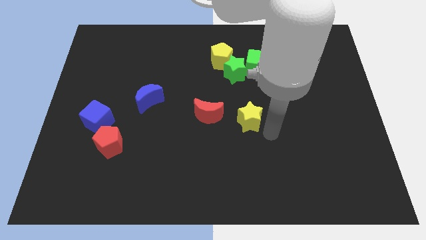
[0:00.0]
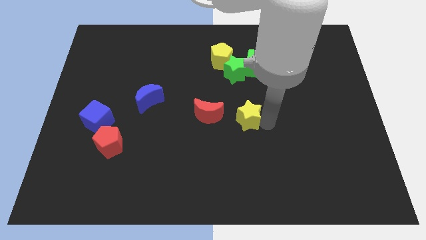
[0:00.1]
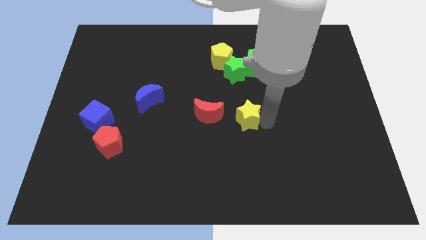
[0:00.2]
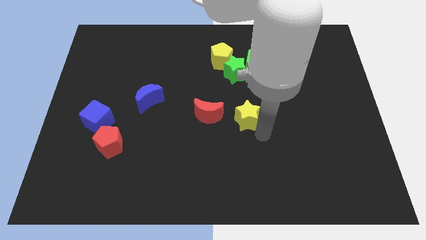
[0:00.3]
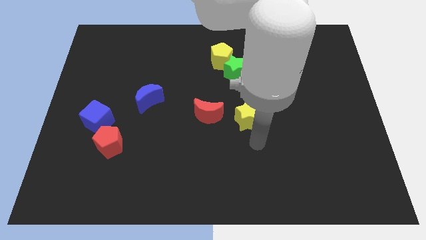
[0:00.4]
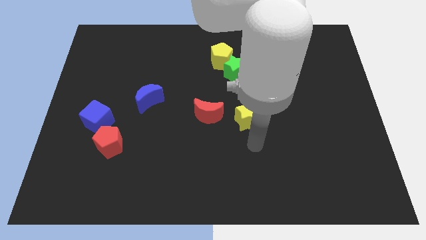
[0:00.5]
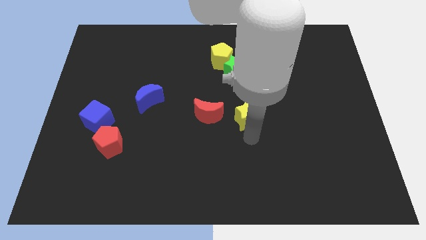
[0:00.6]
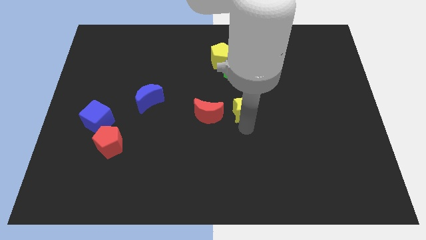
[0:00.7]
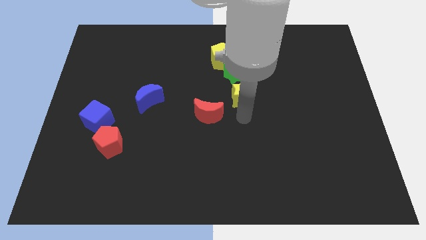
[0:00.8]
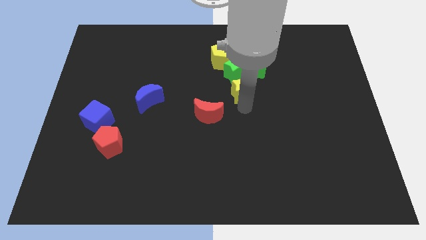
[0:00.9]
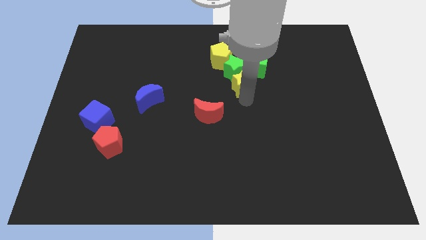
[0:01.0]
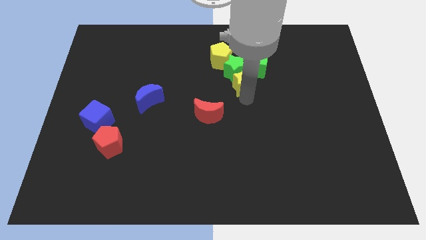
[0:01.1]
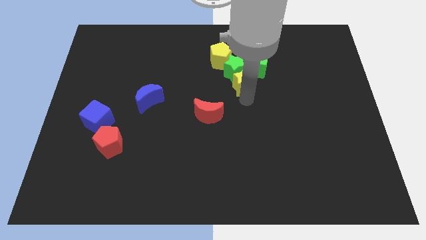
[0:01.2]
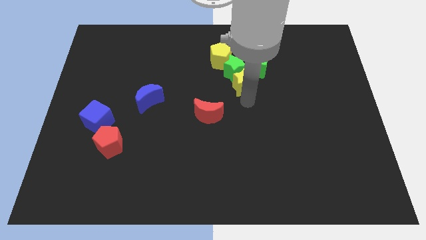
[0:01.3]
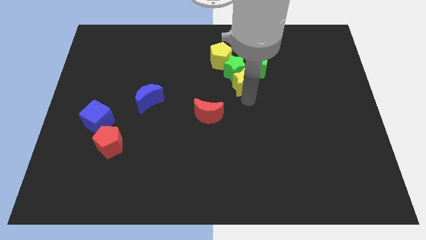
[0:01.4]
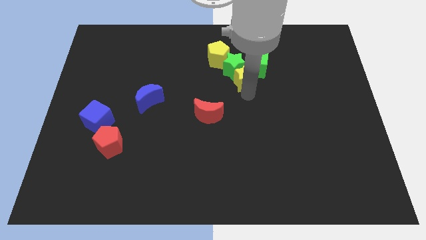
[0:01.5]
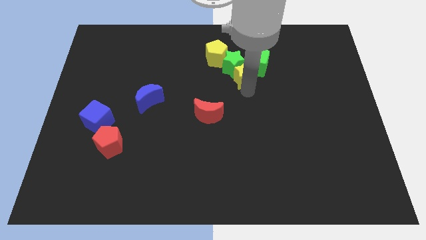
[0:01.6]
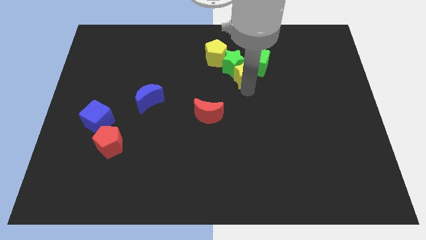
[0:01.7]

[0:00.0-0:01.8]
push the yellow pentagon and green star with yellow star

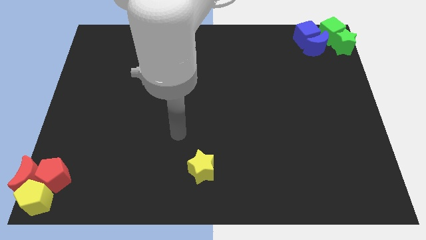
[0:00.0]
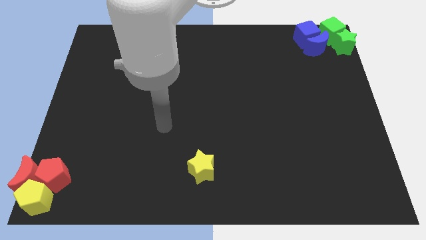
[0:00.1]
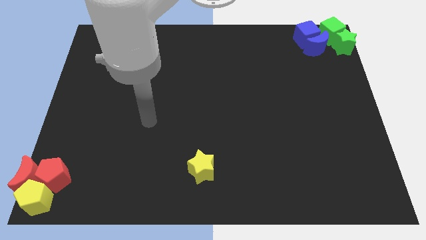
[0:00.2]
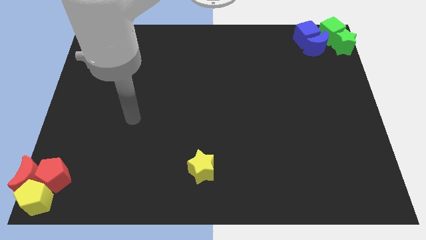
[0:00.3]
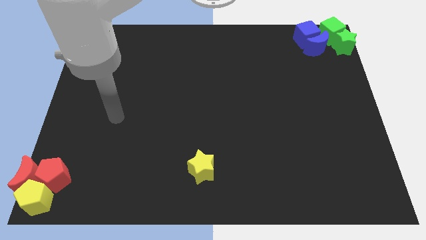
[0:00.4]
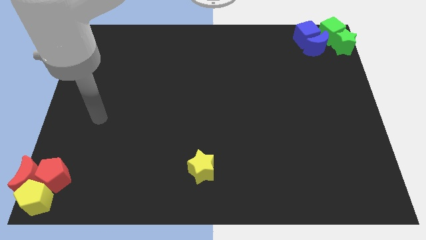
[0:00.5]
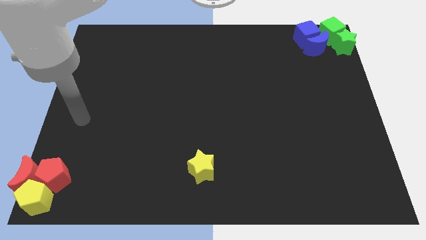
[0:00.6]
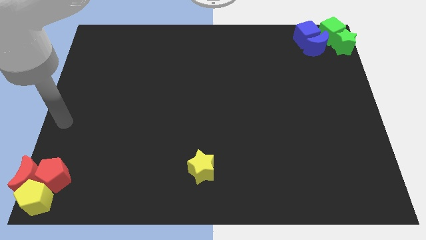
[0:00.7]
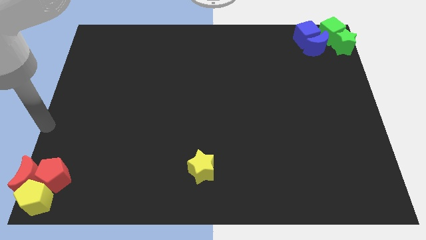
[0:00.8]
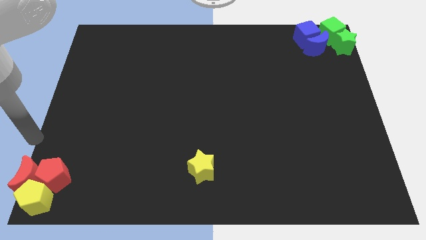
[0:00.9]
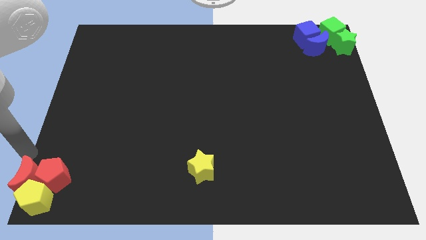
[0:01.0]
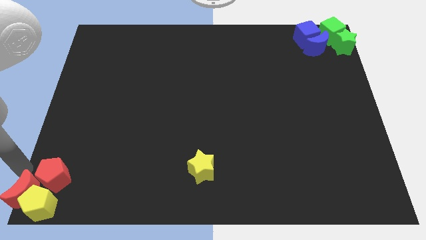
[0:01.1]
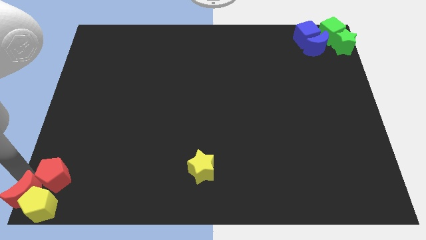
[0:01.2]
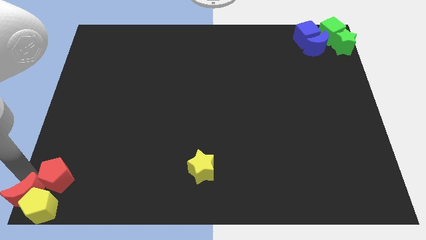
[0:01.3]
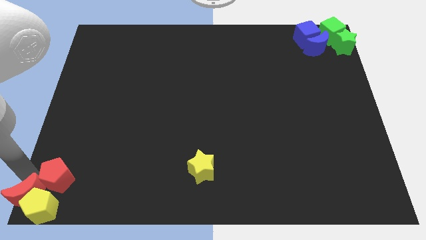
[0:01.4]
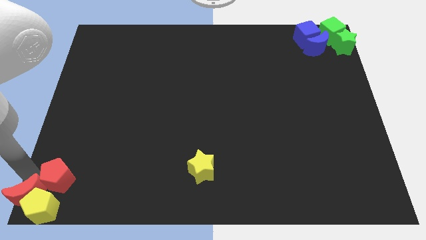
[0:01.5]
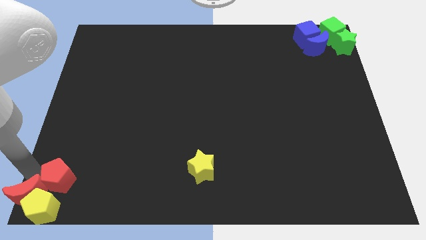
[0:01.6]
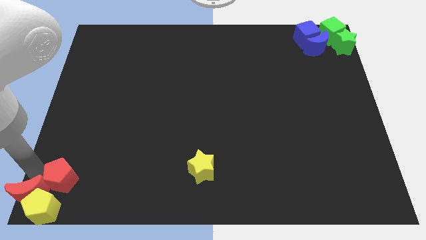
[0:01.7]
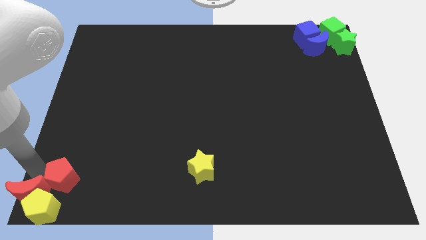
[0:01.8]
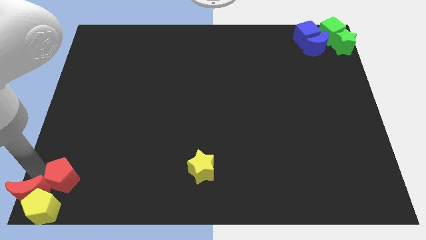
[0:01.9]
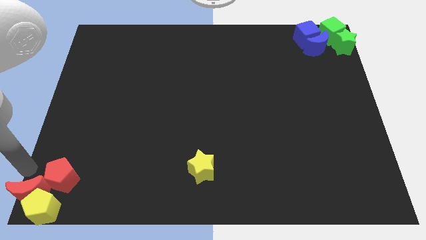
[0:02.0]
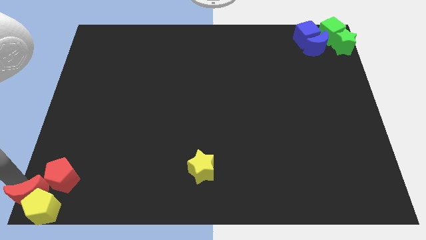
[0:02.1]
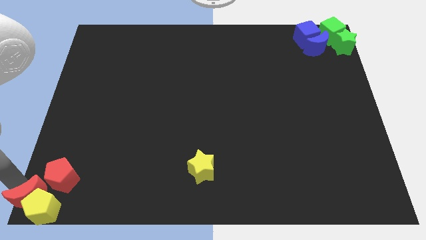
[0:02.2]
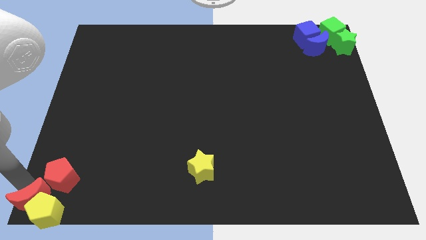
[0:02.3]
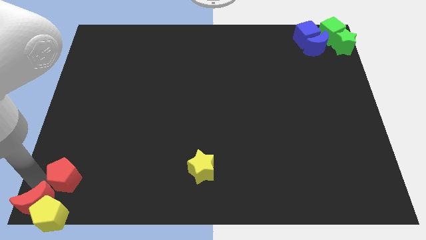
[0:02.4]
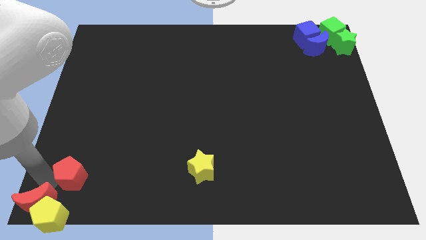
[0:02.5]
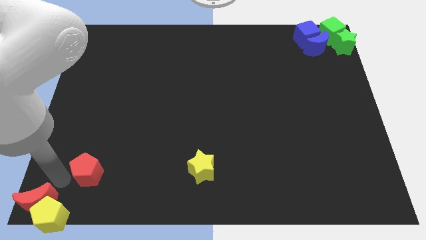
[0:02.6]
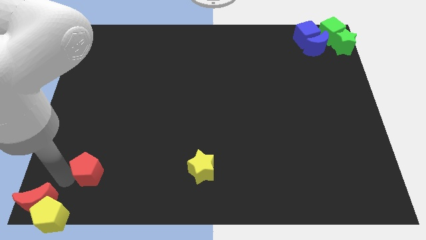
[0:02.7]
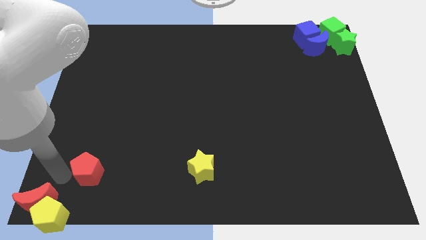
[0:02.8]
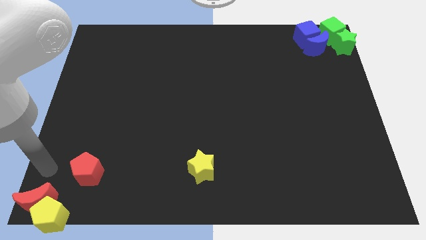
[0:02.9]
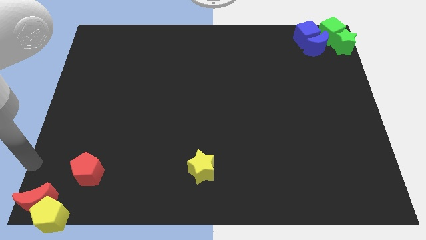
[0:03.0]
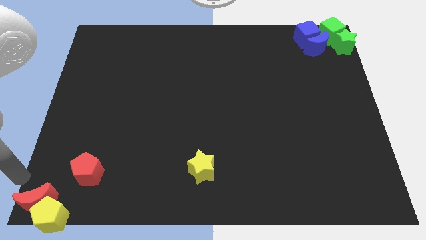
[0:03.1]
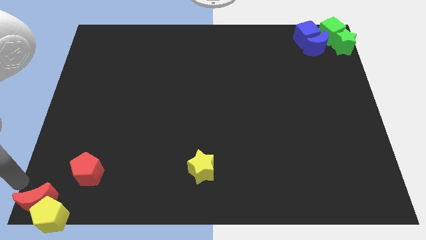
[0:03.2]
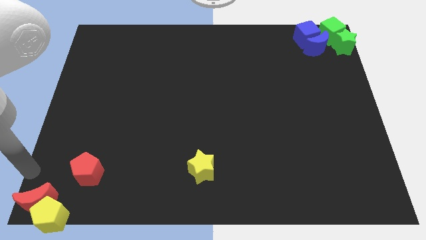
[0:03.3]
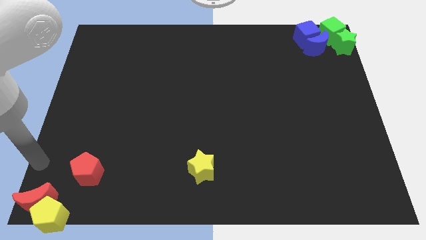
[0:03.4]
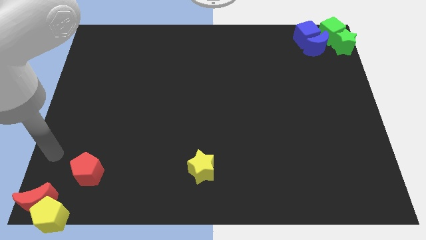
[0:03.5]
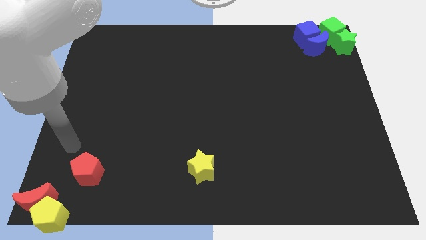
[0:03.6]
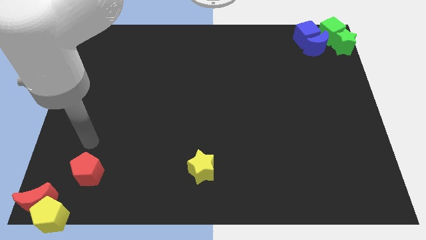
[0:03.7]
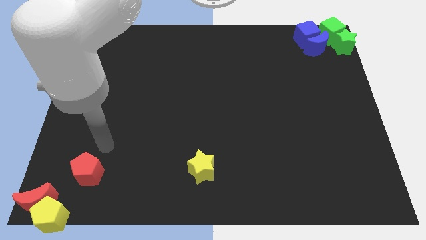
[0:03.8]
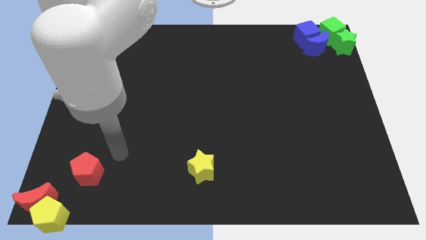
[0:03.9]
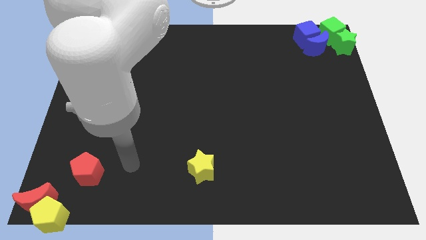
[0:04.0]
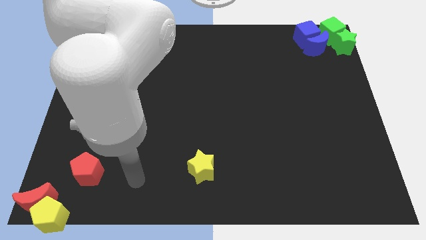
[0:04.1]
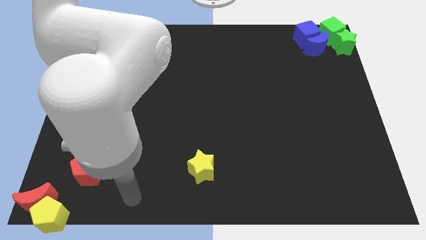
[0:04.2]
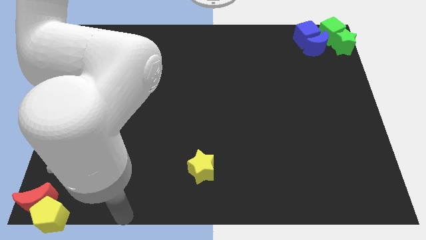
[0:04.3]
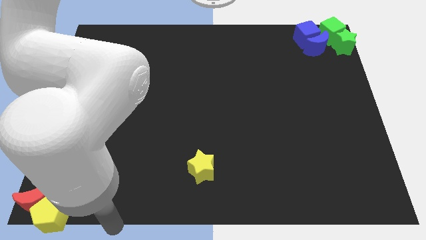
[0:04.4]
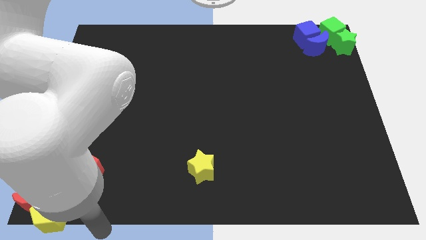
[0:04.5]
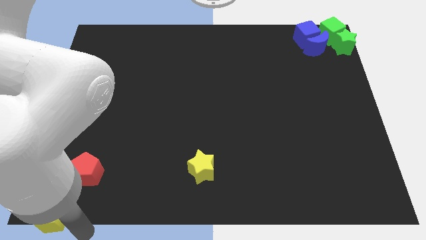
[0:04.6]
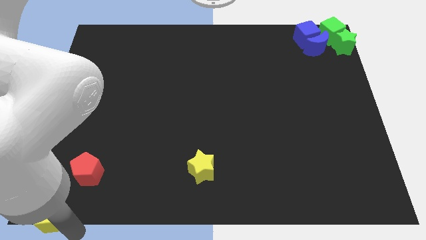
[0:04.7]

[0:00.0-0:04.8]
separate the red pentagon with the two blocks

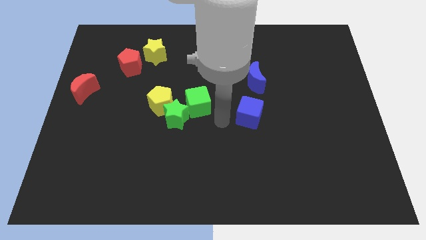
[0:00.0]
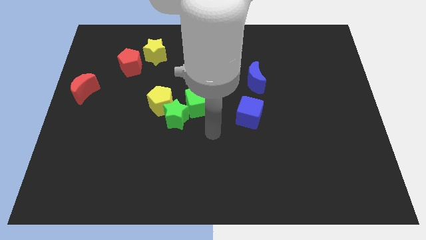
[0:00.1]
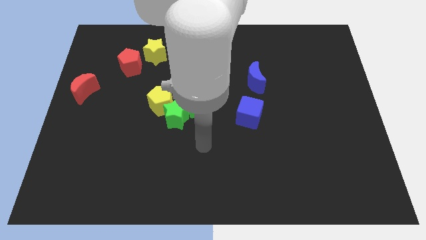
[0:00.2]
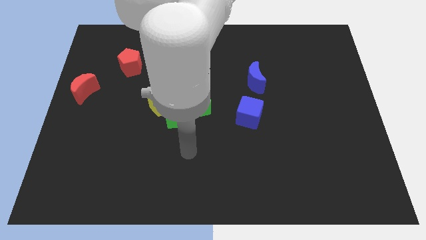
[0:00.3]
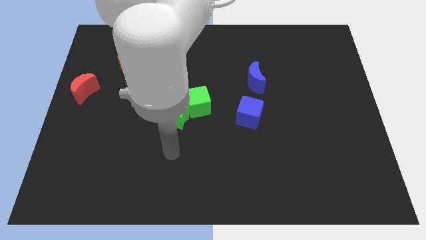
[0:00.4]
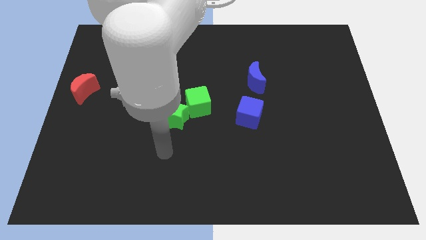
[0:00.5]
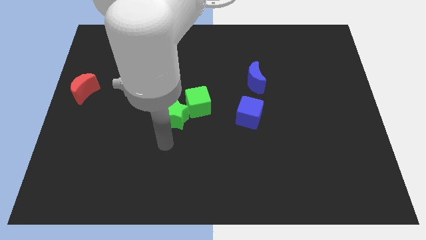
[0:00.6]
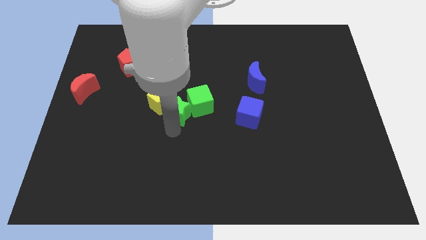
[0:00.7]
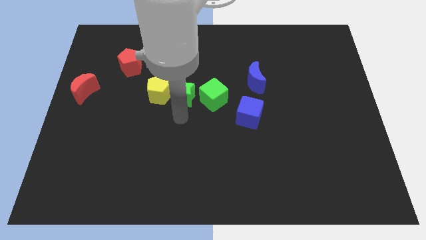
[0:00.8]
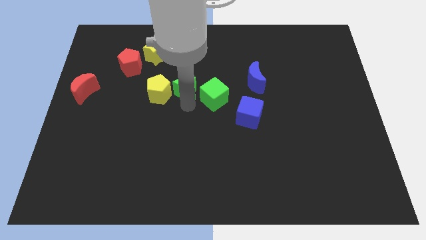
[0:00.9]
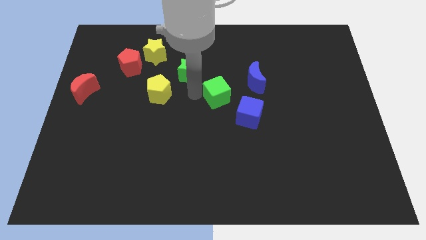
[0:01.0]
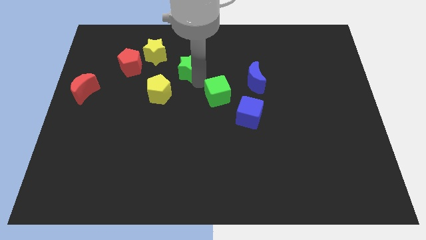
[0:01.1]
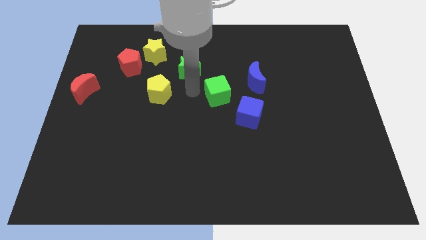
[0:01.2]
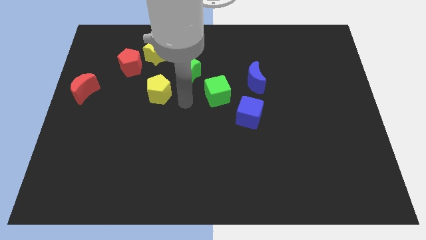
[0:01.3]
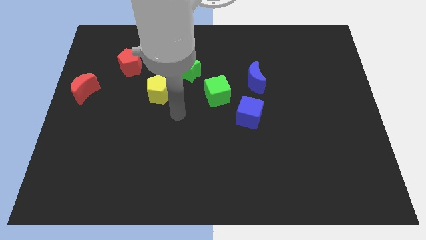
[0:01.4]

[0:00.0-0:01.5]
separate the green star from the yellow pentagon and green cube

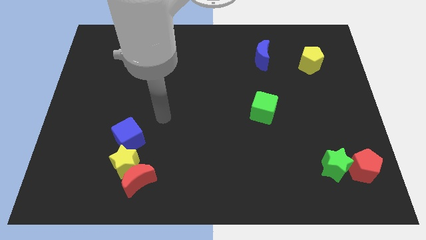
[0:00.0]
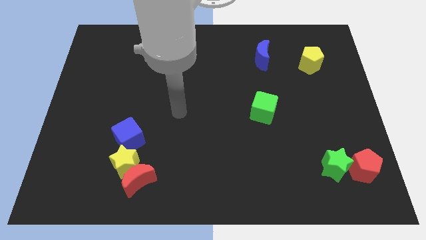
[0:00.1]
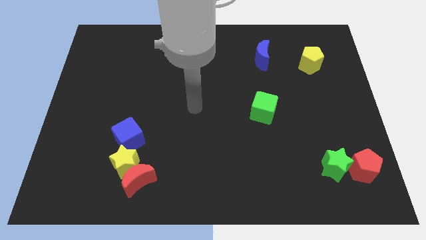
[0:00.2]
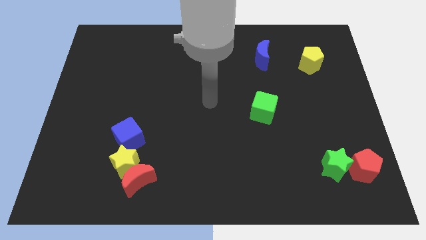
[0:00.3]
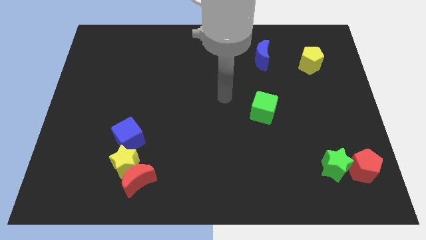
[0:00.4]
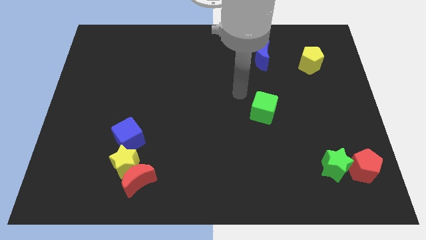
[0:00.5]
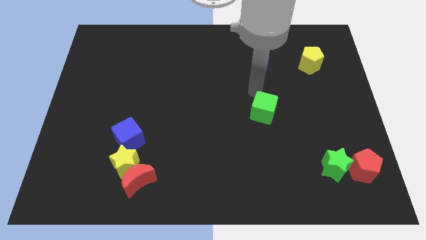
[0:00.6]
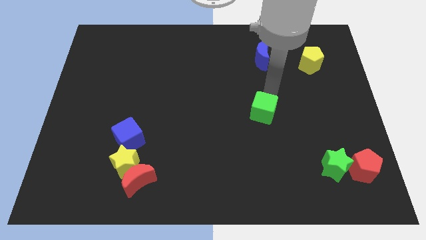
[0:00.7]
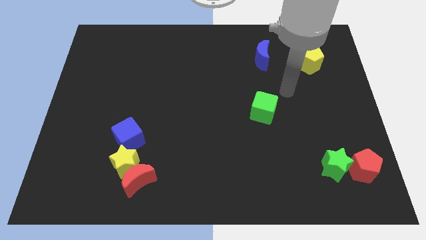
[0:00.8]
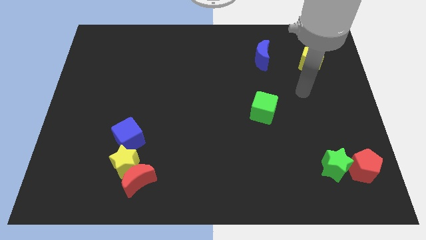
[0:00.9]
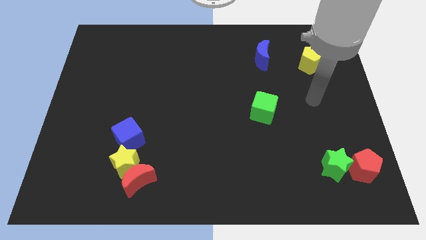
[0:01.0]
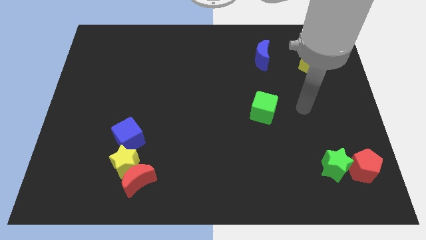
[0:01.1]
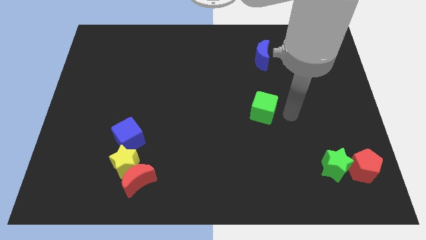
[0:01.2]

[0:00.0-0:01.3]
move the arm towards the right side of the green cube
